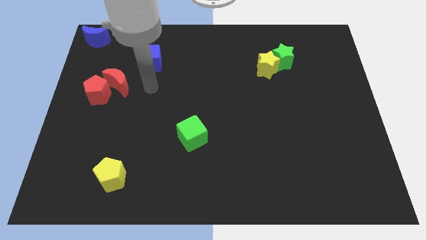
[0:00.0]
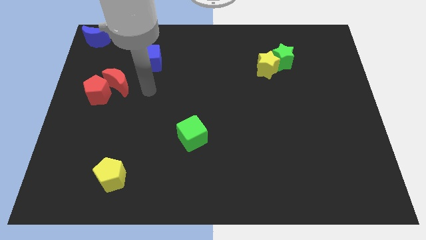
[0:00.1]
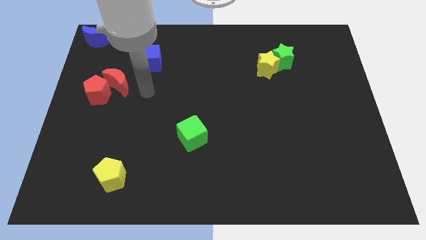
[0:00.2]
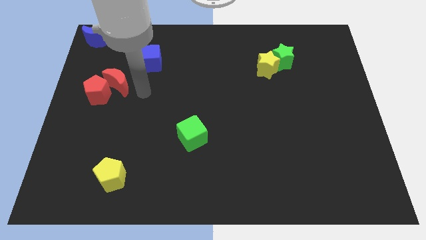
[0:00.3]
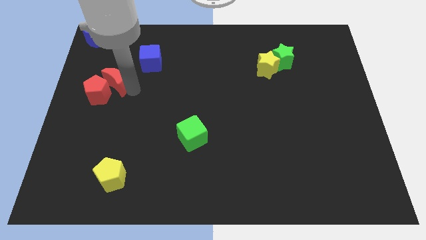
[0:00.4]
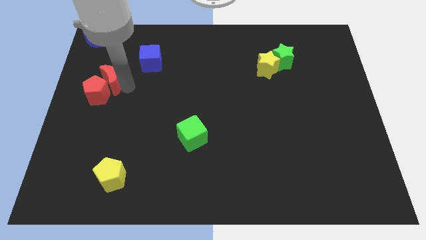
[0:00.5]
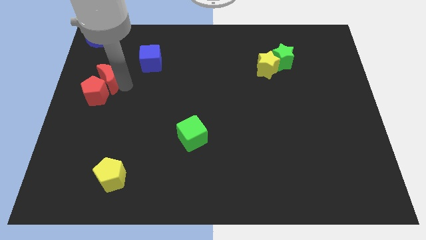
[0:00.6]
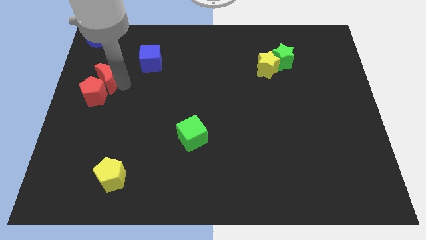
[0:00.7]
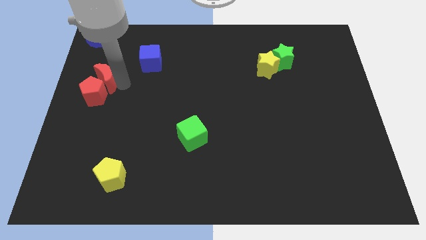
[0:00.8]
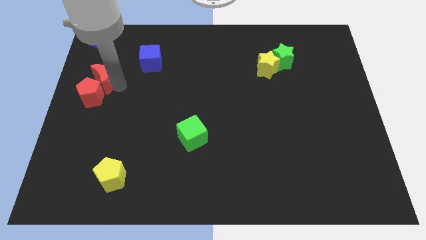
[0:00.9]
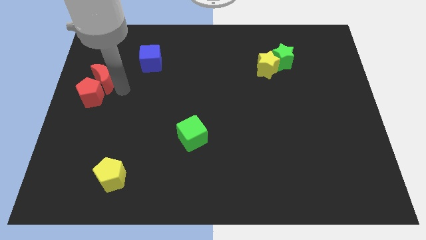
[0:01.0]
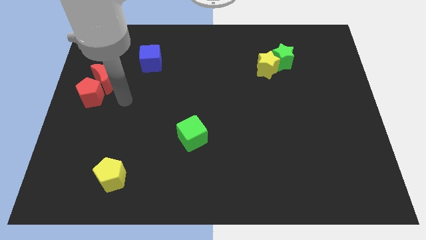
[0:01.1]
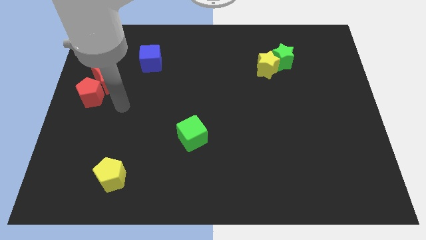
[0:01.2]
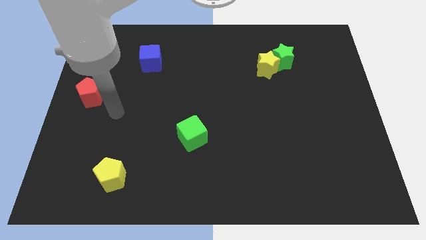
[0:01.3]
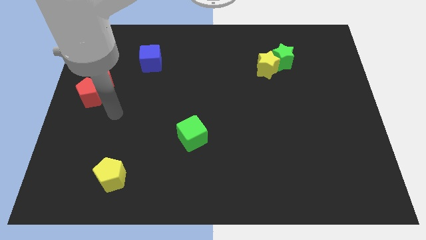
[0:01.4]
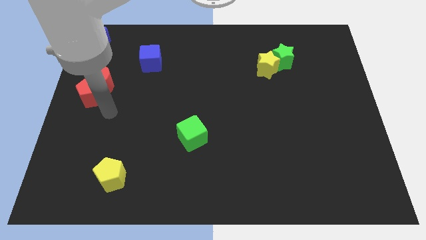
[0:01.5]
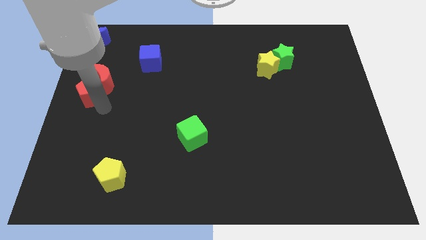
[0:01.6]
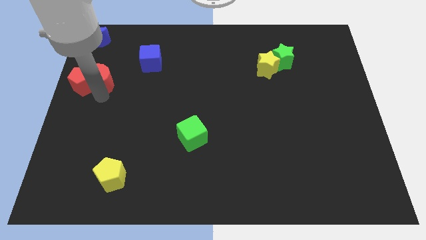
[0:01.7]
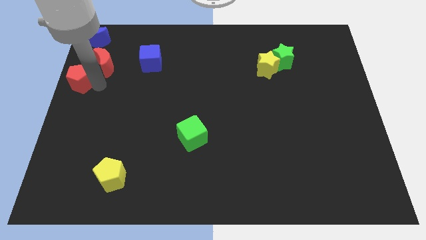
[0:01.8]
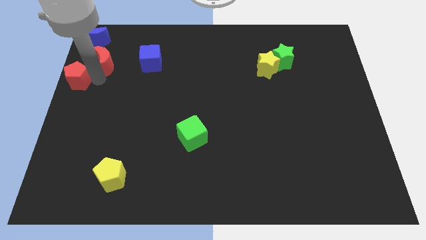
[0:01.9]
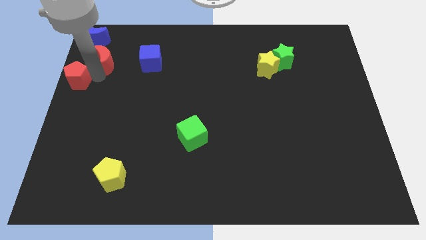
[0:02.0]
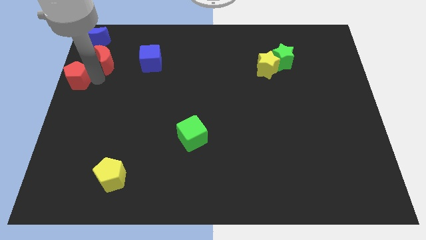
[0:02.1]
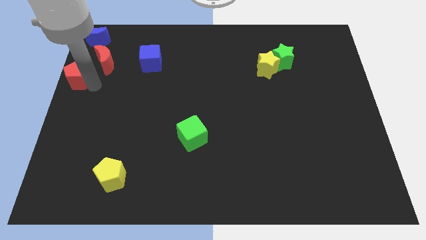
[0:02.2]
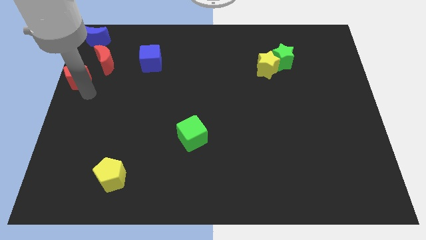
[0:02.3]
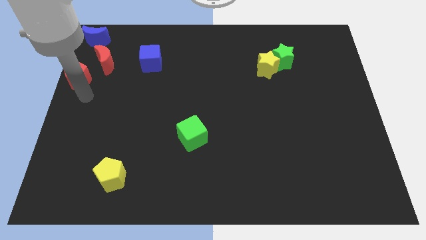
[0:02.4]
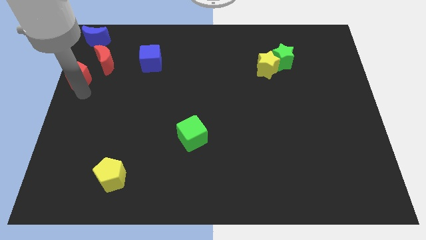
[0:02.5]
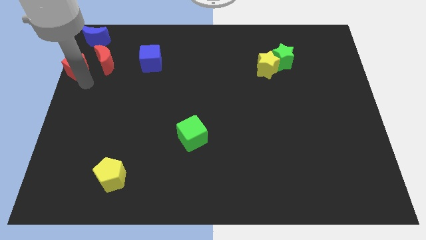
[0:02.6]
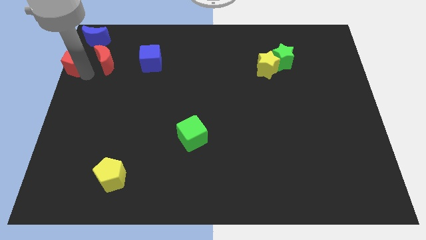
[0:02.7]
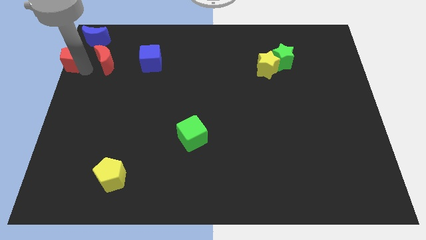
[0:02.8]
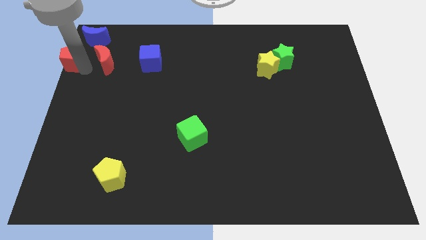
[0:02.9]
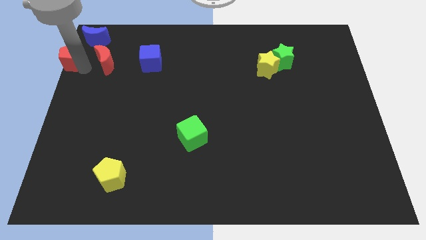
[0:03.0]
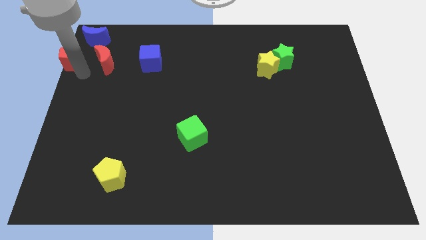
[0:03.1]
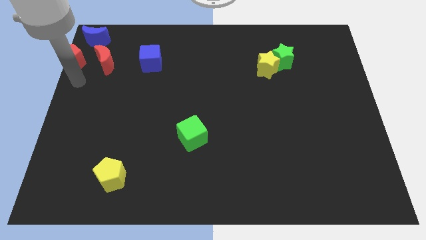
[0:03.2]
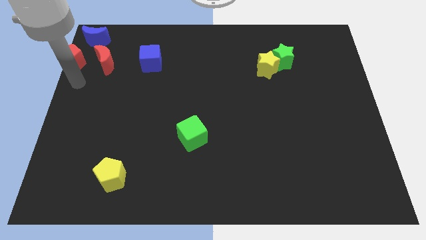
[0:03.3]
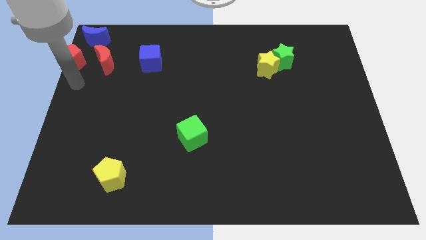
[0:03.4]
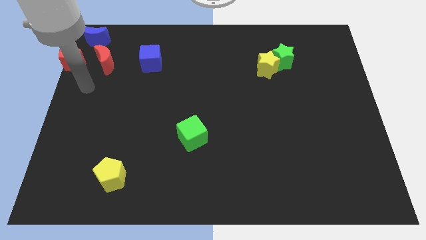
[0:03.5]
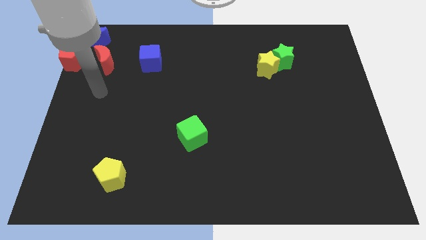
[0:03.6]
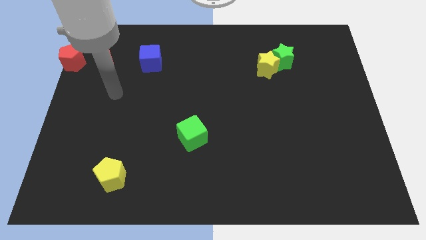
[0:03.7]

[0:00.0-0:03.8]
place the red blocks below blue moon

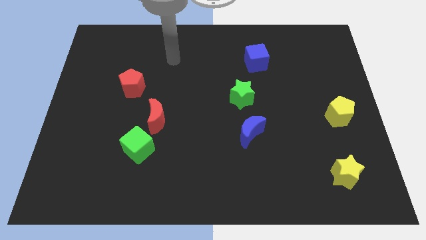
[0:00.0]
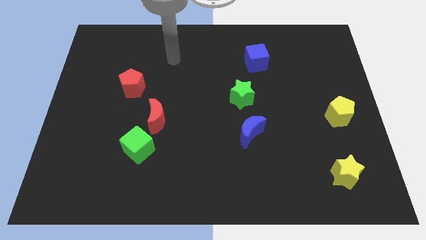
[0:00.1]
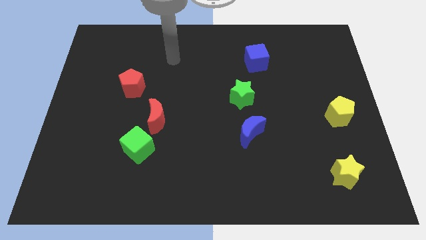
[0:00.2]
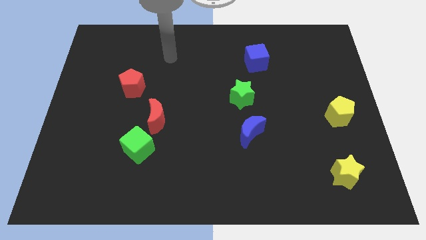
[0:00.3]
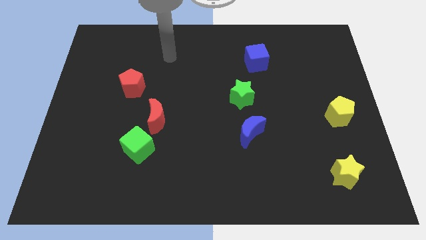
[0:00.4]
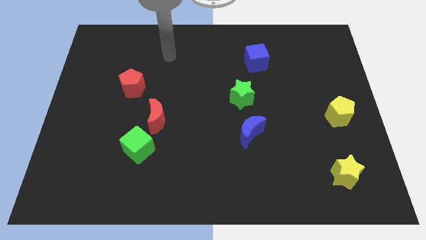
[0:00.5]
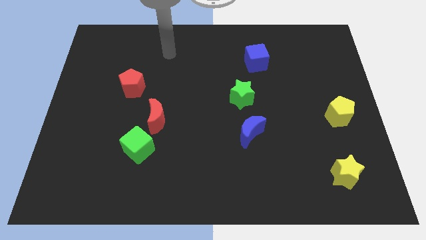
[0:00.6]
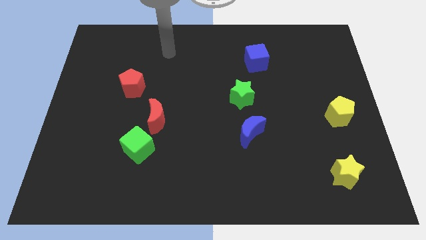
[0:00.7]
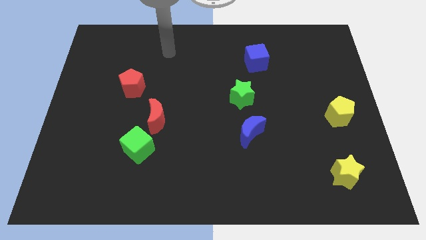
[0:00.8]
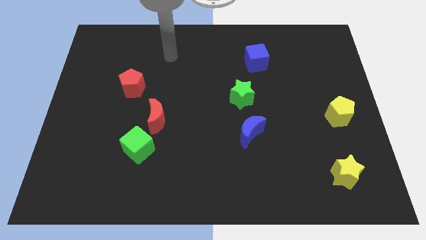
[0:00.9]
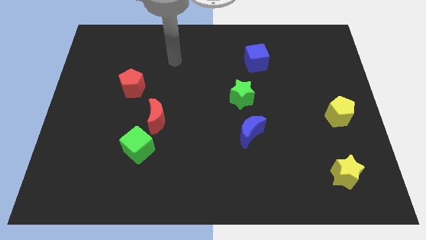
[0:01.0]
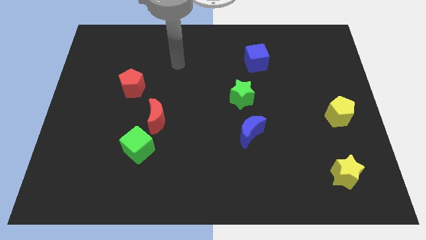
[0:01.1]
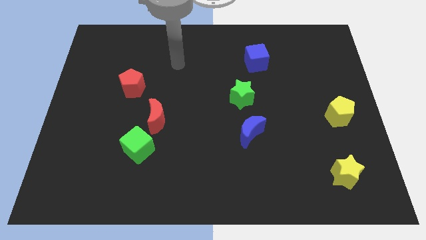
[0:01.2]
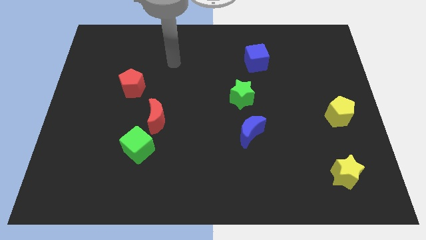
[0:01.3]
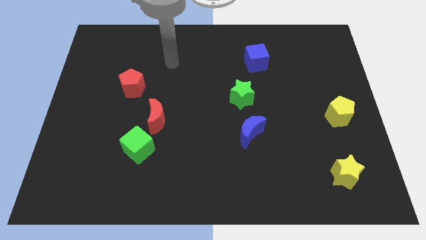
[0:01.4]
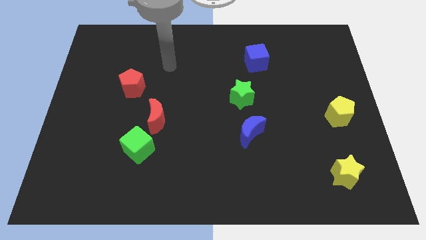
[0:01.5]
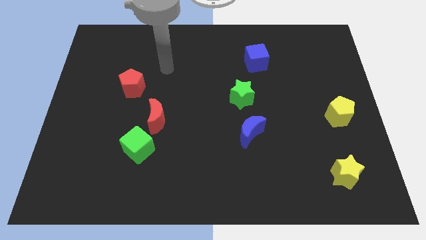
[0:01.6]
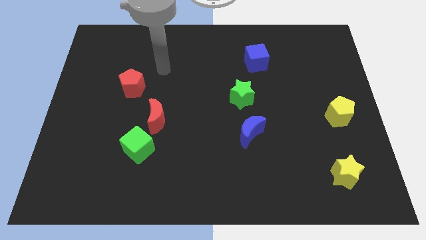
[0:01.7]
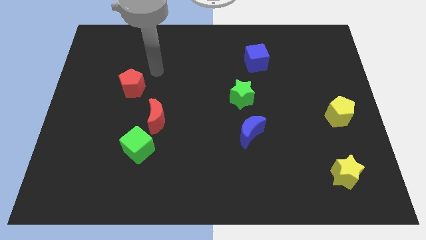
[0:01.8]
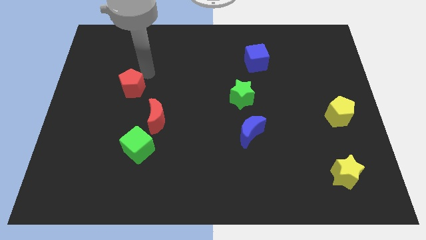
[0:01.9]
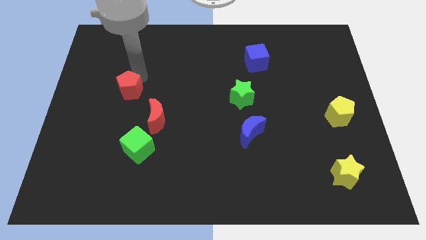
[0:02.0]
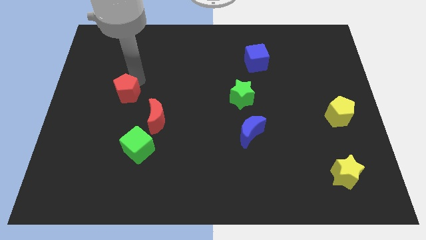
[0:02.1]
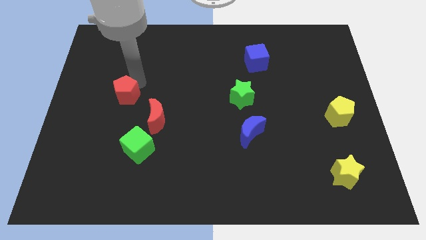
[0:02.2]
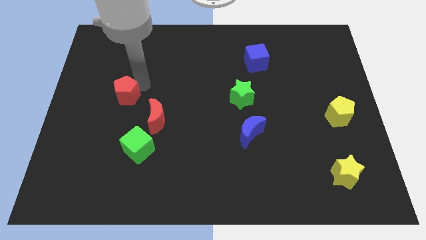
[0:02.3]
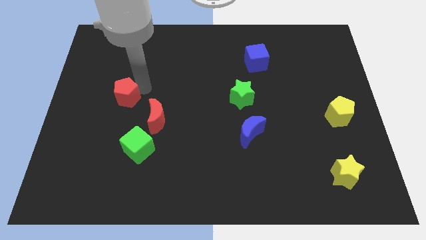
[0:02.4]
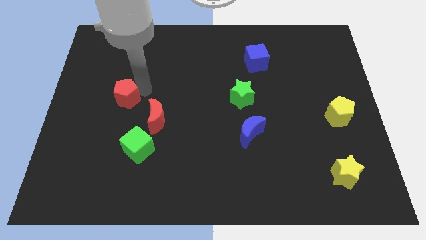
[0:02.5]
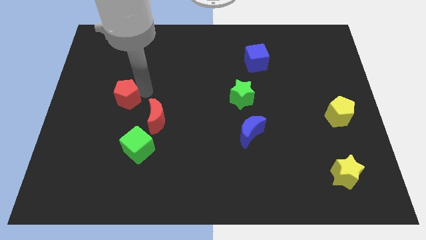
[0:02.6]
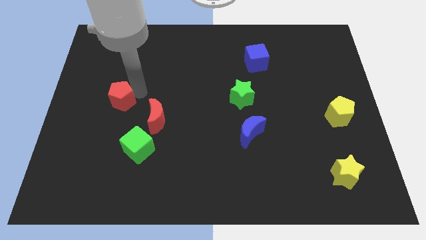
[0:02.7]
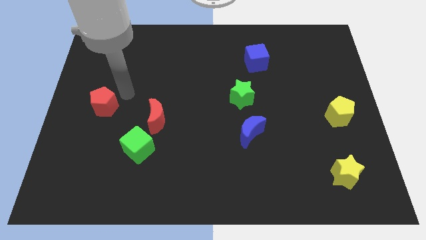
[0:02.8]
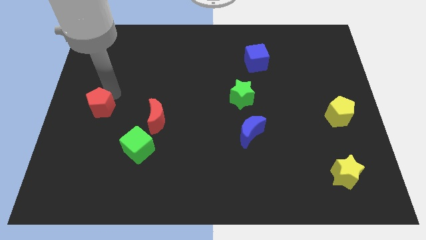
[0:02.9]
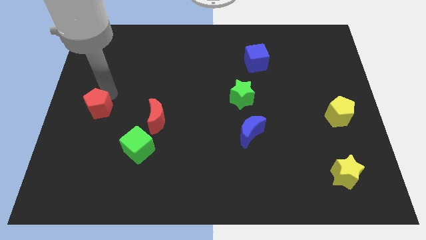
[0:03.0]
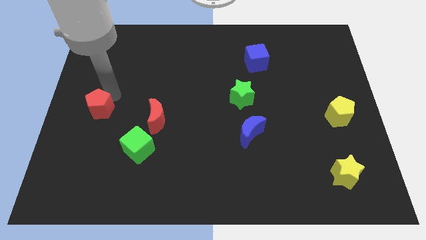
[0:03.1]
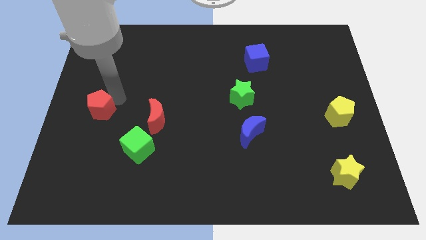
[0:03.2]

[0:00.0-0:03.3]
push the red pentagon towards the center left of the table

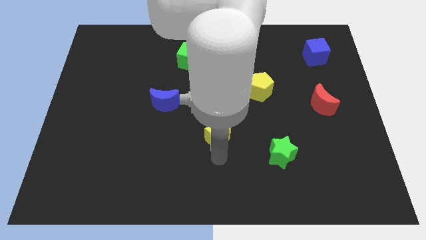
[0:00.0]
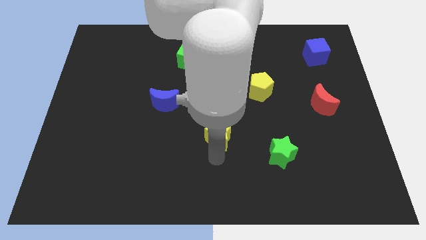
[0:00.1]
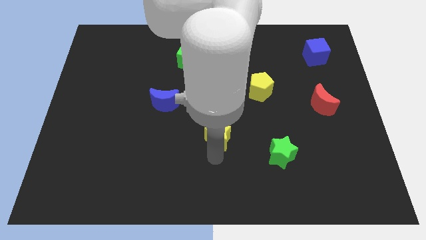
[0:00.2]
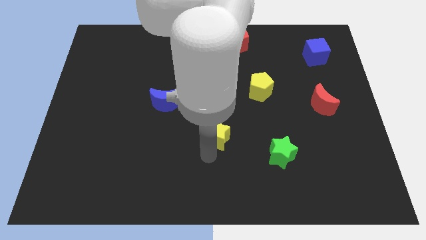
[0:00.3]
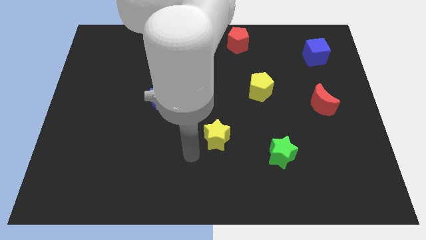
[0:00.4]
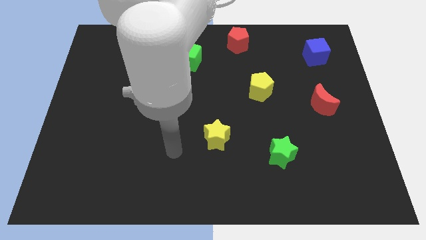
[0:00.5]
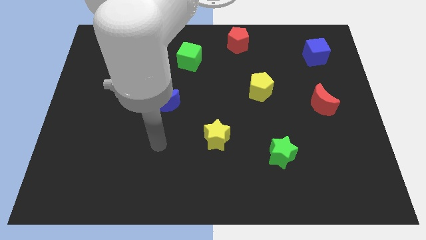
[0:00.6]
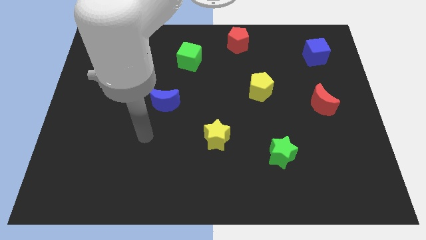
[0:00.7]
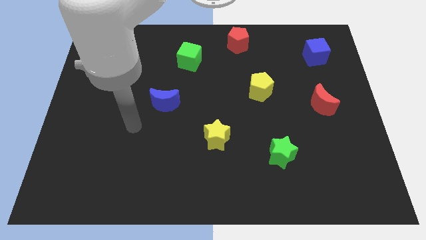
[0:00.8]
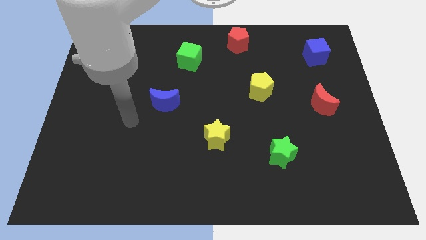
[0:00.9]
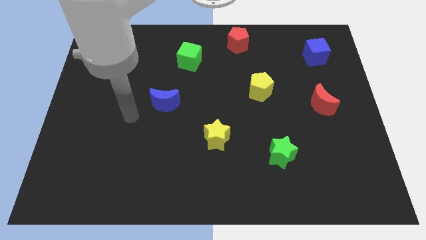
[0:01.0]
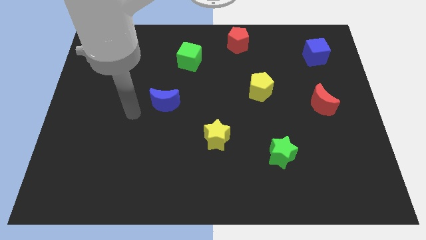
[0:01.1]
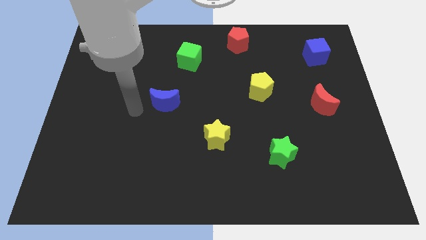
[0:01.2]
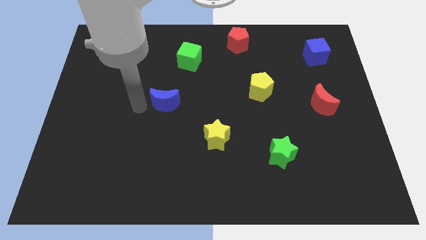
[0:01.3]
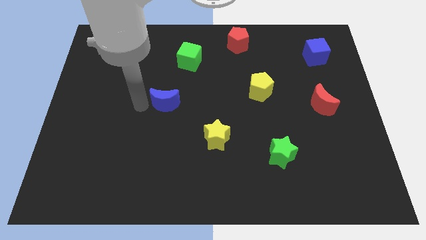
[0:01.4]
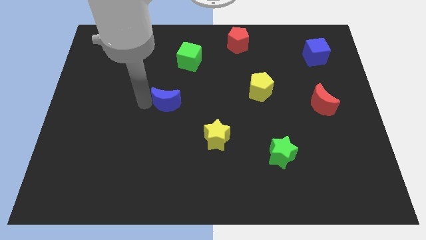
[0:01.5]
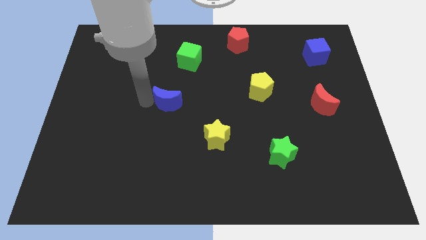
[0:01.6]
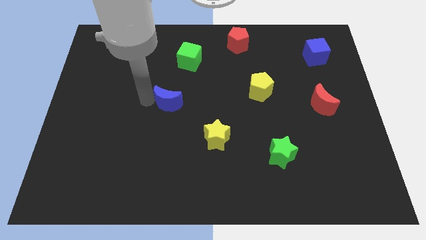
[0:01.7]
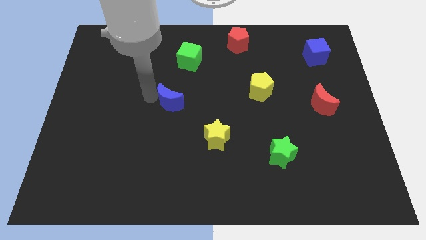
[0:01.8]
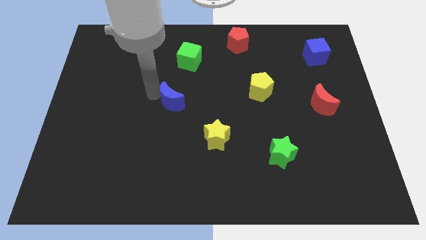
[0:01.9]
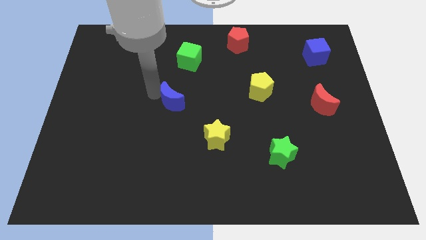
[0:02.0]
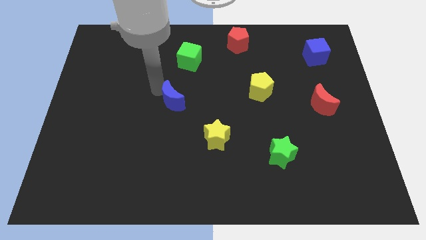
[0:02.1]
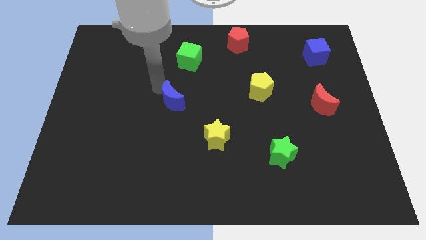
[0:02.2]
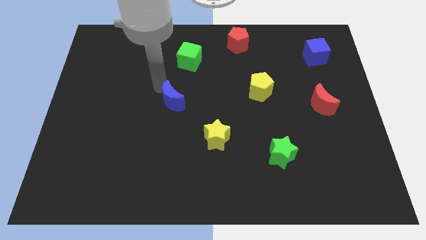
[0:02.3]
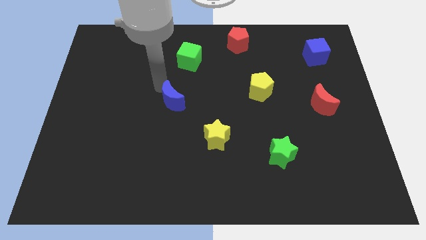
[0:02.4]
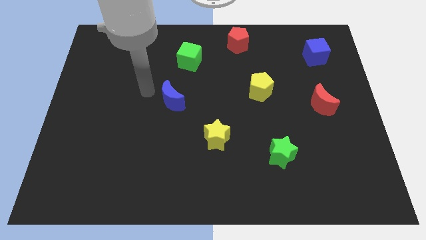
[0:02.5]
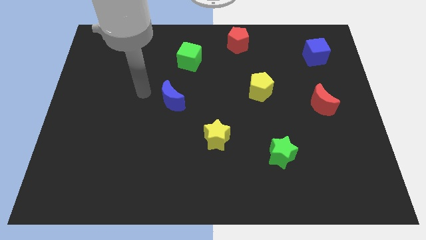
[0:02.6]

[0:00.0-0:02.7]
place the blue crescent diagonal to the yellow star
